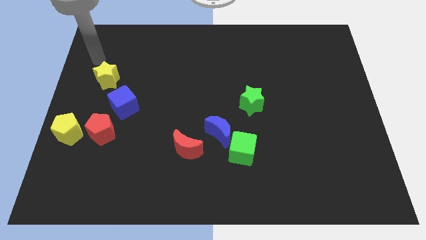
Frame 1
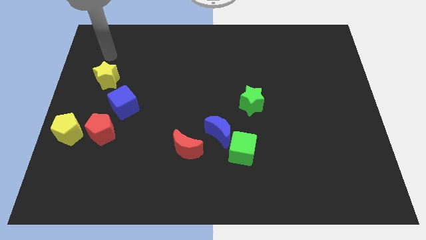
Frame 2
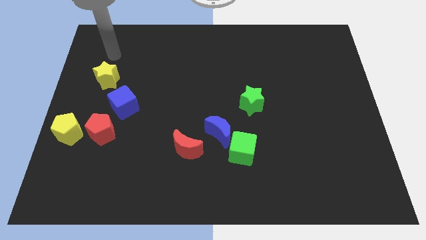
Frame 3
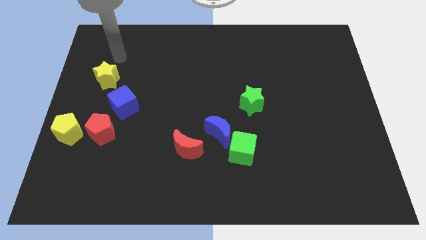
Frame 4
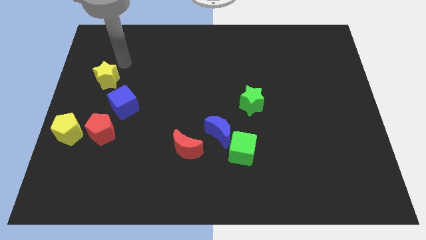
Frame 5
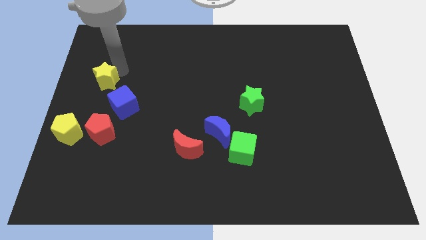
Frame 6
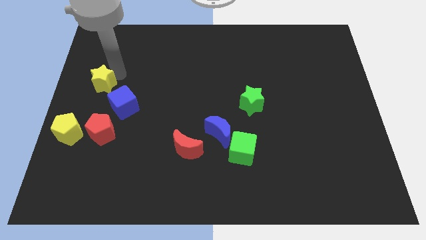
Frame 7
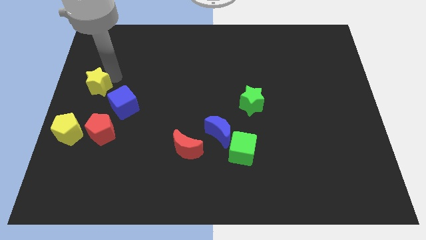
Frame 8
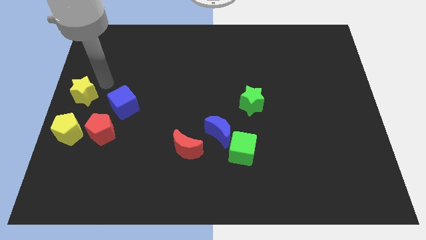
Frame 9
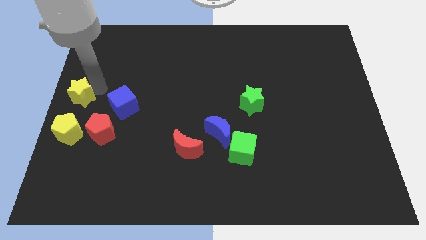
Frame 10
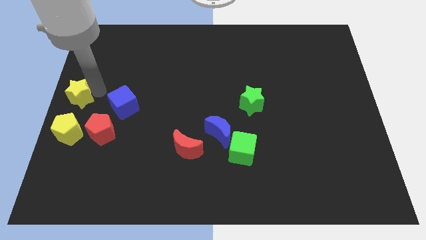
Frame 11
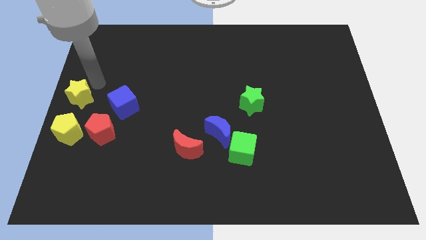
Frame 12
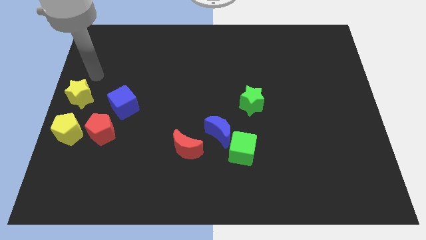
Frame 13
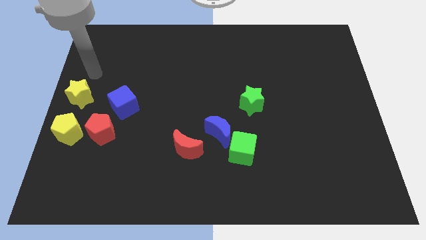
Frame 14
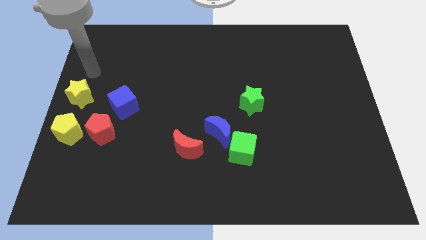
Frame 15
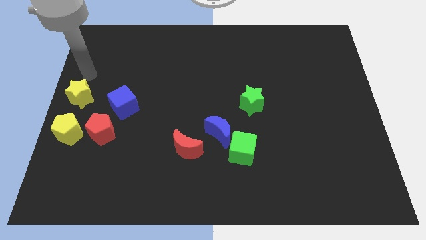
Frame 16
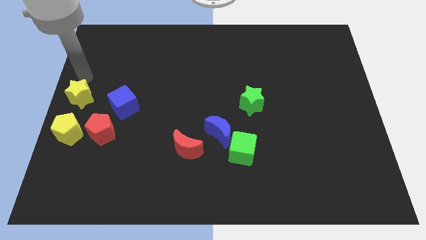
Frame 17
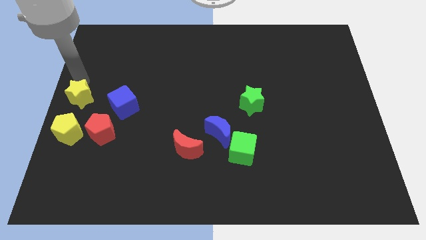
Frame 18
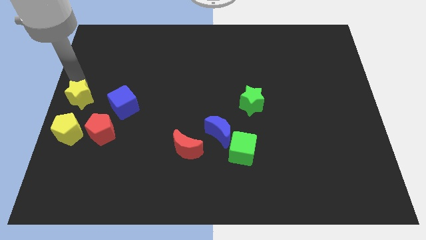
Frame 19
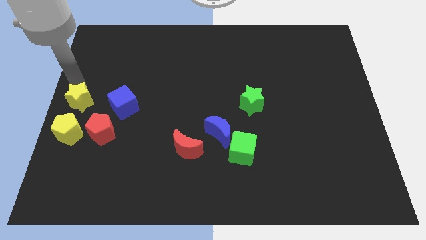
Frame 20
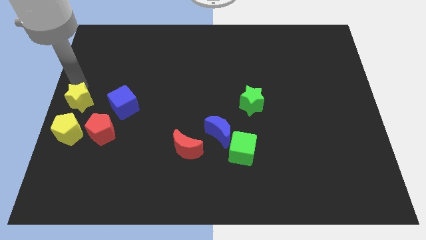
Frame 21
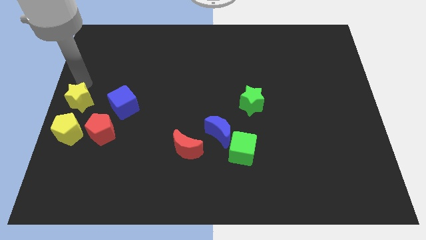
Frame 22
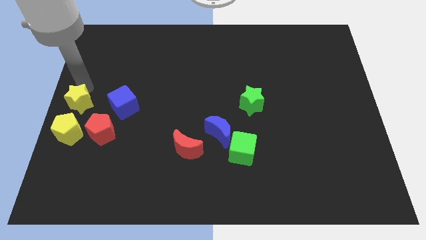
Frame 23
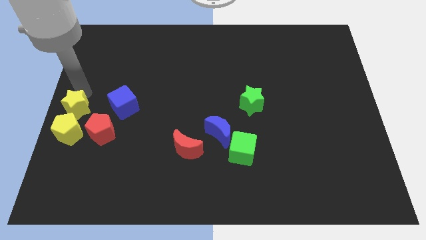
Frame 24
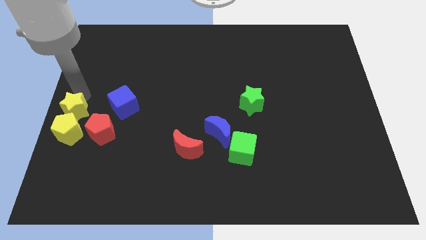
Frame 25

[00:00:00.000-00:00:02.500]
place the yellow star at the top of yellow pentagon

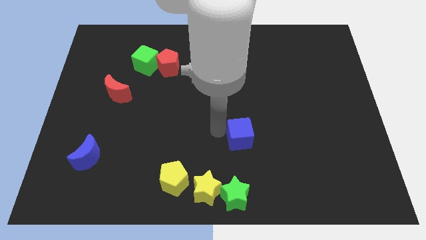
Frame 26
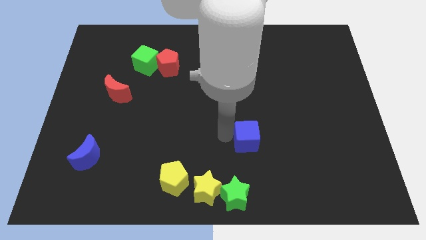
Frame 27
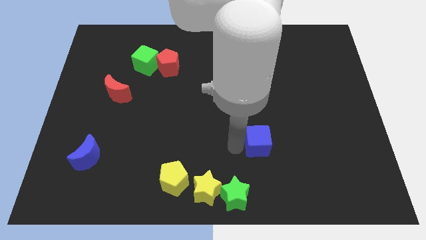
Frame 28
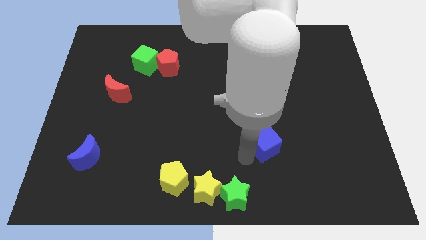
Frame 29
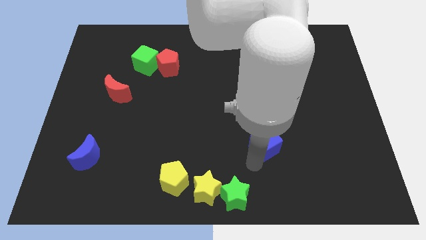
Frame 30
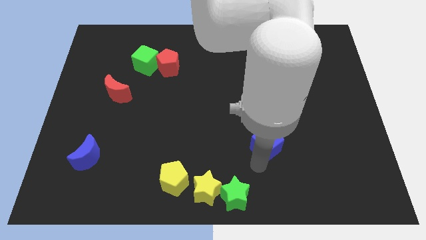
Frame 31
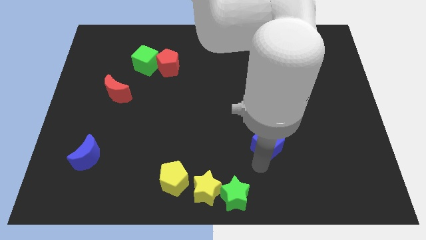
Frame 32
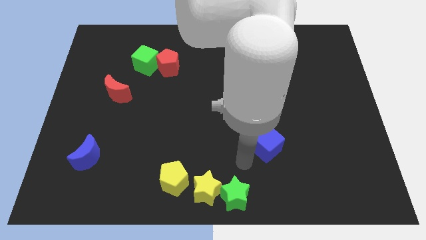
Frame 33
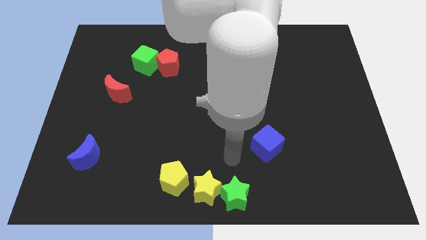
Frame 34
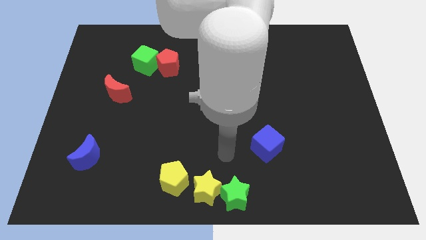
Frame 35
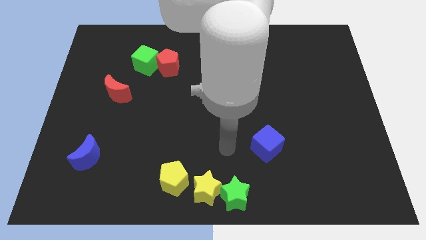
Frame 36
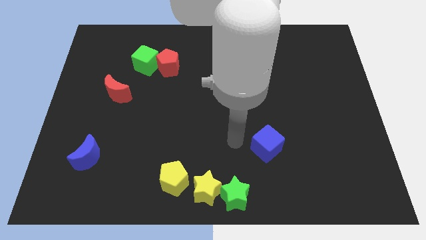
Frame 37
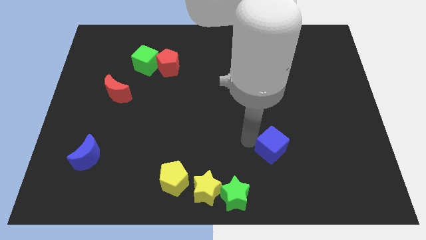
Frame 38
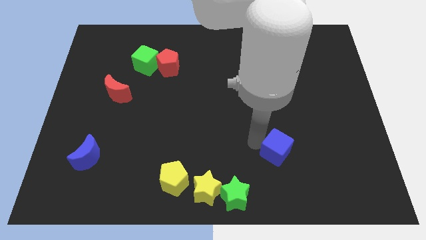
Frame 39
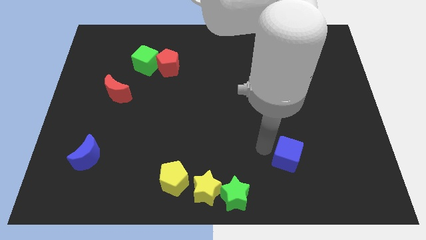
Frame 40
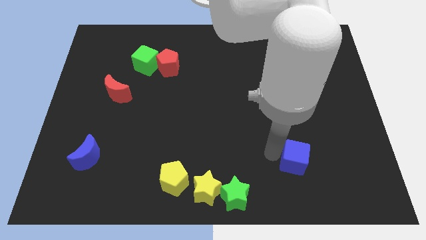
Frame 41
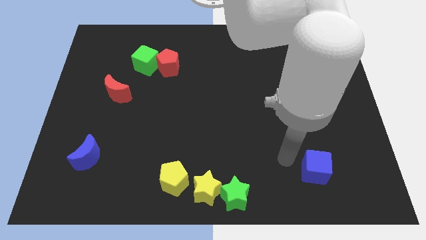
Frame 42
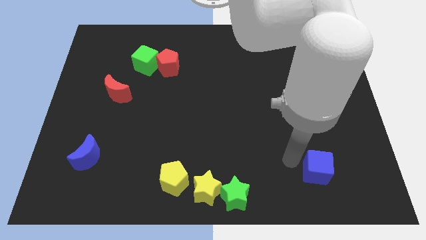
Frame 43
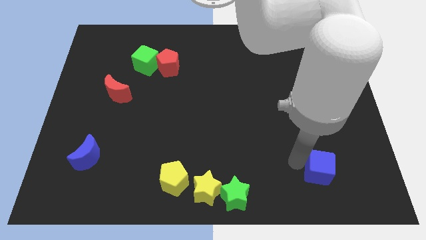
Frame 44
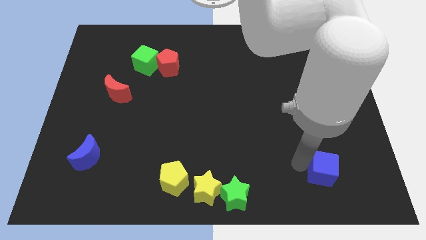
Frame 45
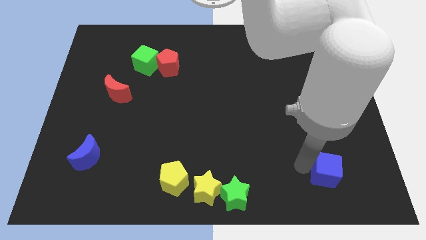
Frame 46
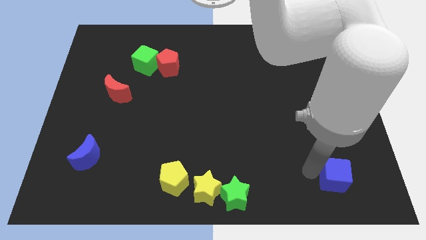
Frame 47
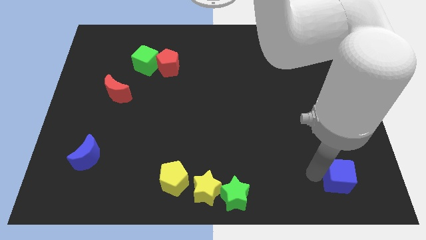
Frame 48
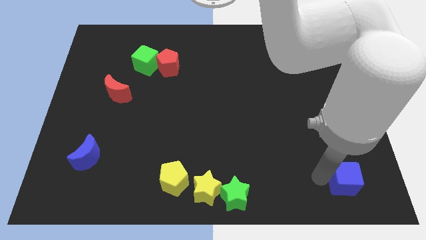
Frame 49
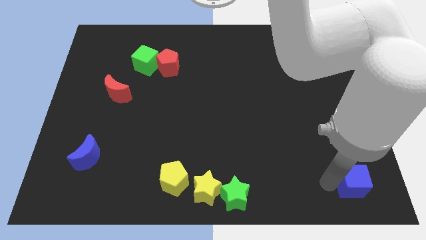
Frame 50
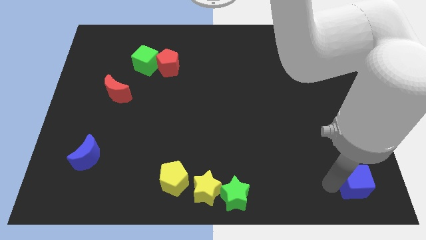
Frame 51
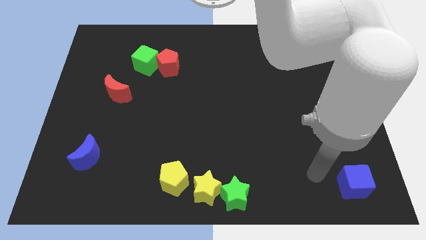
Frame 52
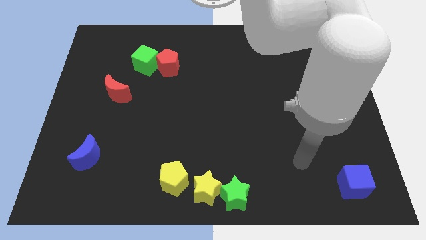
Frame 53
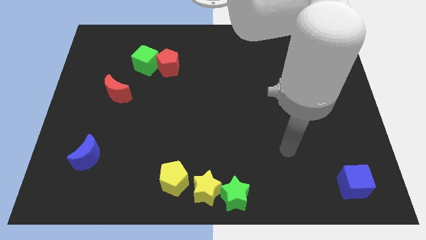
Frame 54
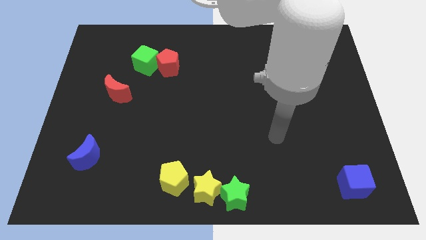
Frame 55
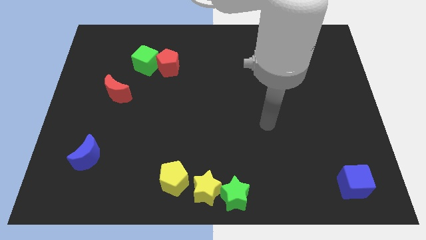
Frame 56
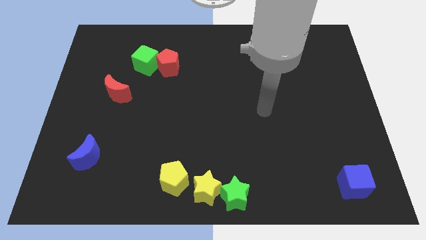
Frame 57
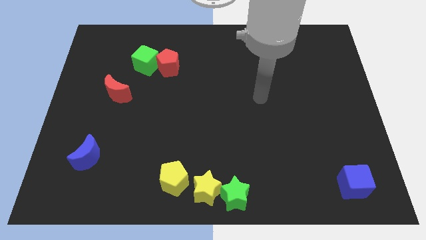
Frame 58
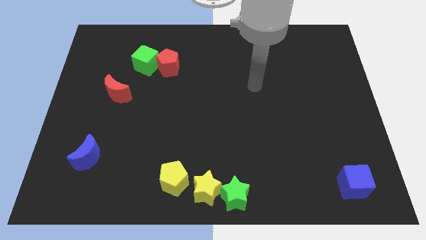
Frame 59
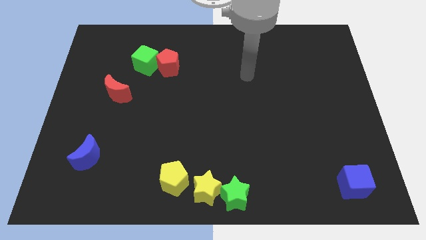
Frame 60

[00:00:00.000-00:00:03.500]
slide the blue cube towards the bottom right of the board

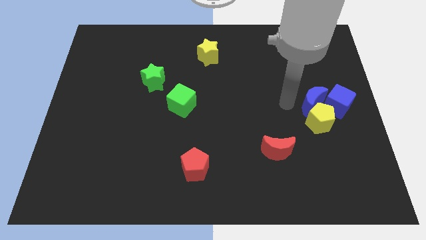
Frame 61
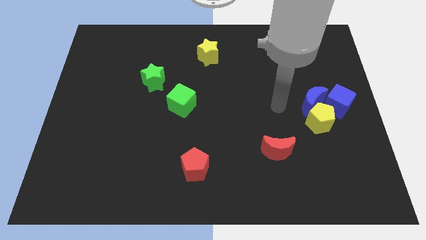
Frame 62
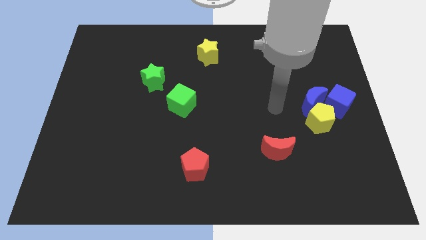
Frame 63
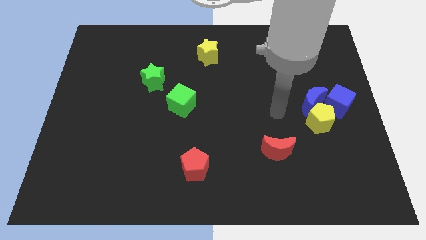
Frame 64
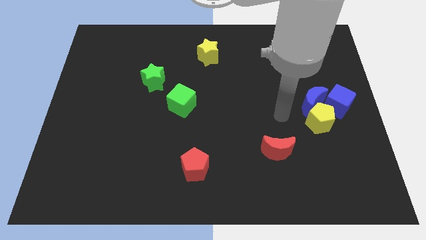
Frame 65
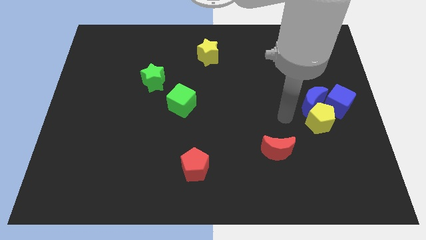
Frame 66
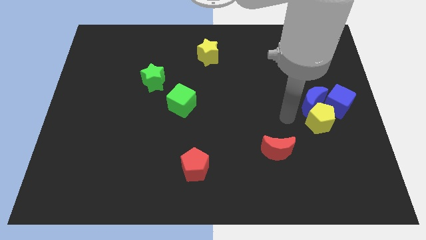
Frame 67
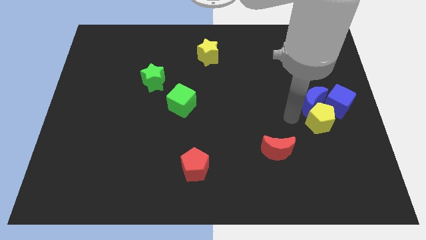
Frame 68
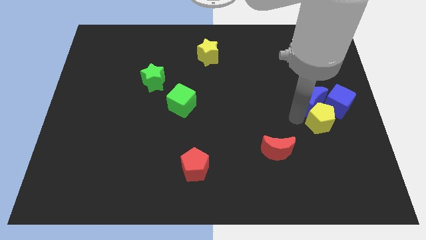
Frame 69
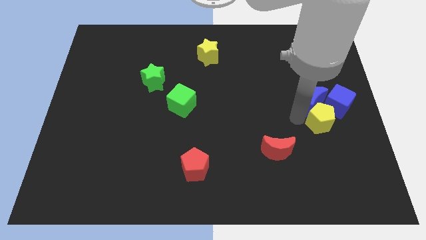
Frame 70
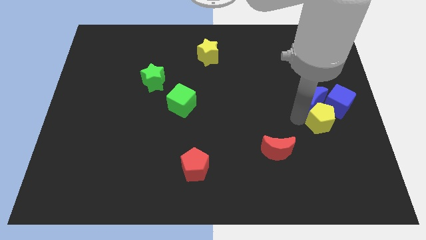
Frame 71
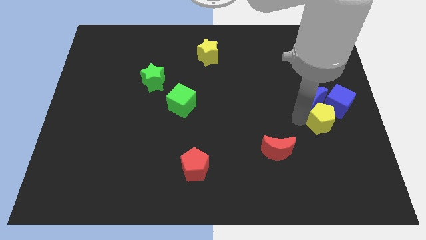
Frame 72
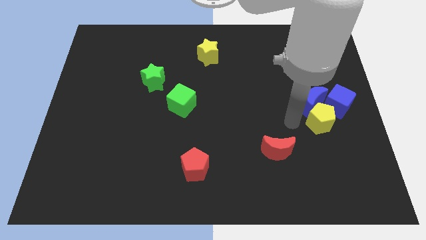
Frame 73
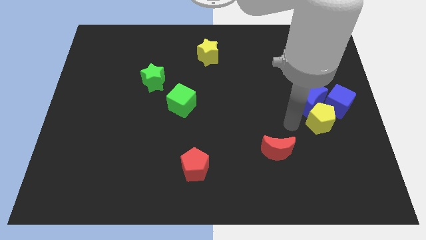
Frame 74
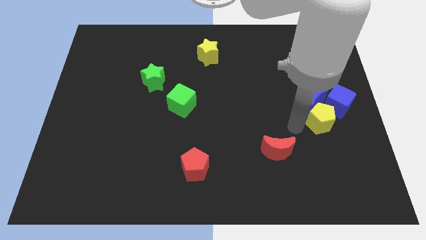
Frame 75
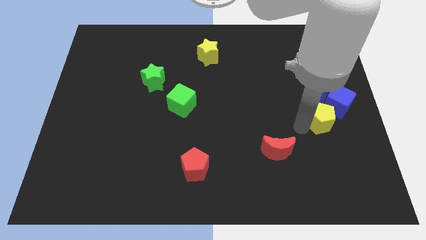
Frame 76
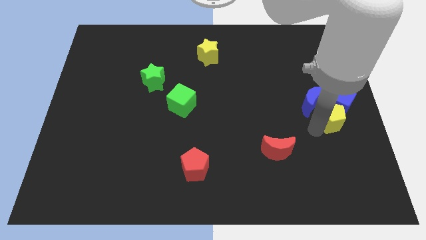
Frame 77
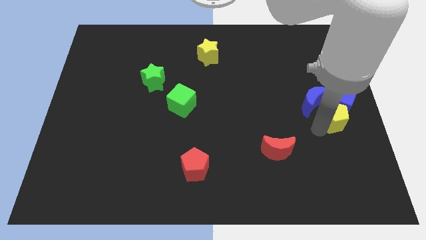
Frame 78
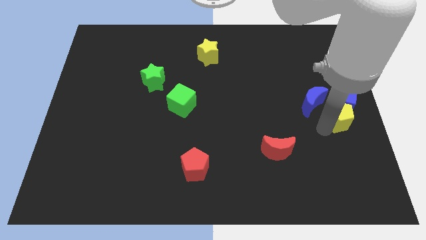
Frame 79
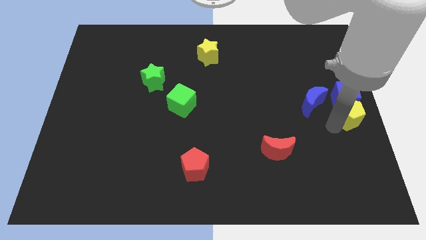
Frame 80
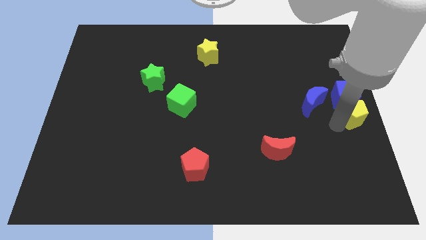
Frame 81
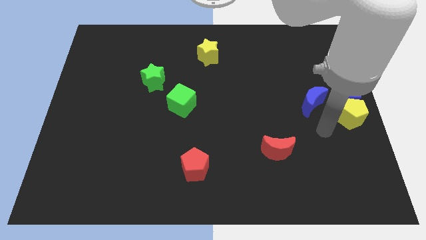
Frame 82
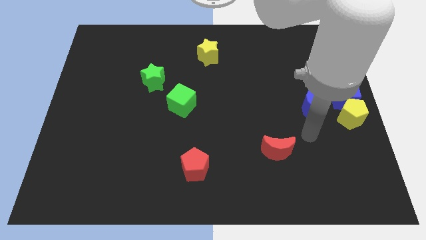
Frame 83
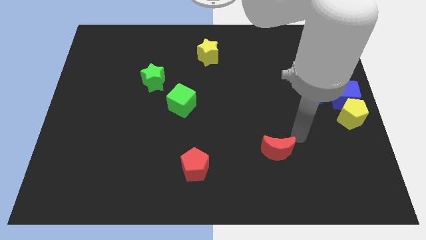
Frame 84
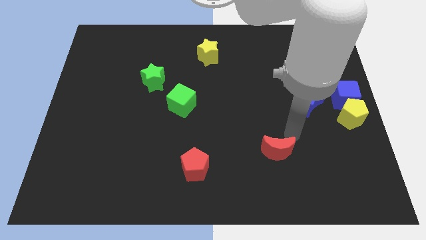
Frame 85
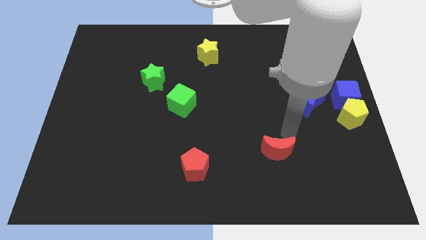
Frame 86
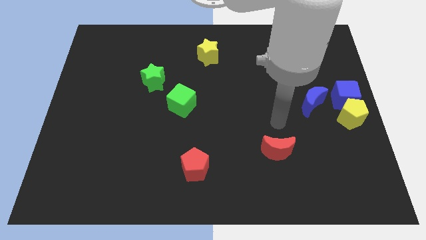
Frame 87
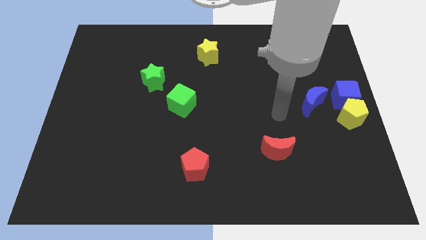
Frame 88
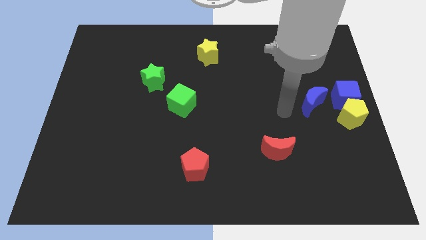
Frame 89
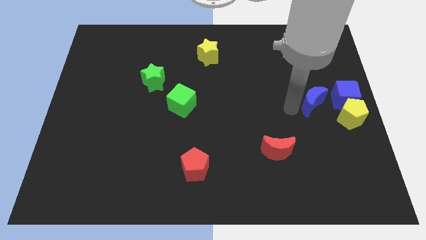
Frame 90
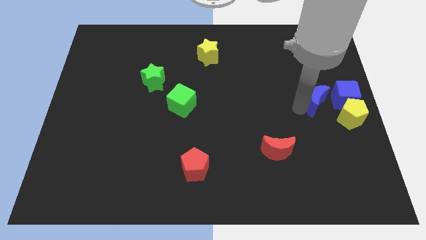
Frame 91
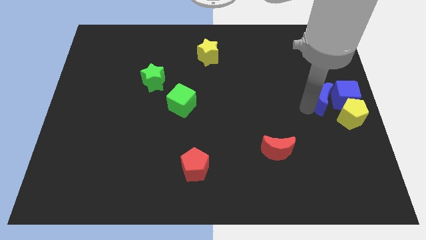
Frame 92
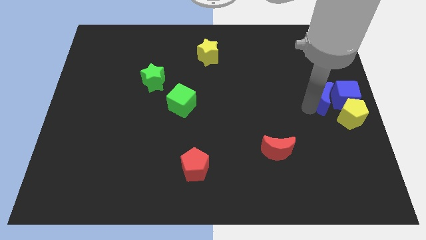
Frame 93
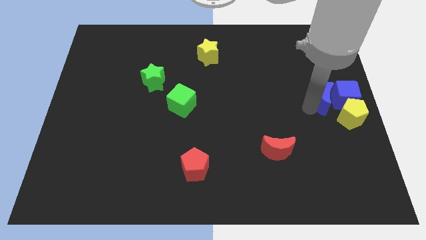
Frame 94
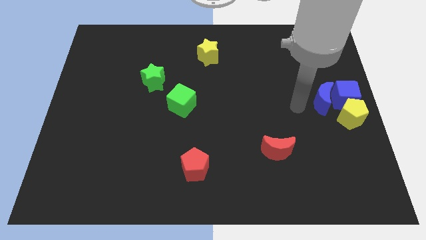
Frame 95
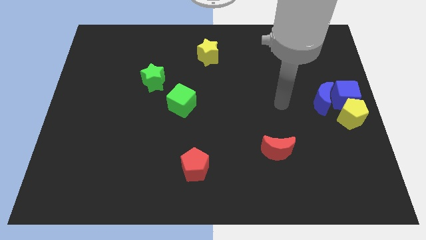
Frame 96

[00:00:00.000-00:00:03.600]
place the group of blocks at the center right of the board
